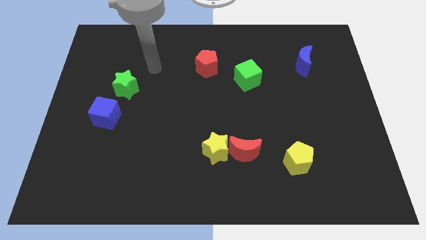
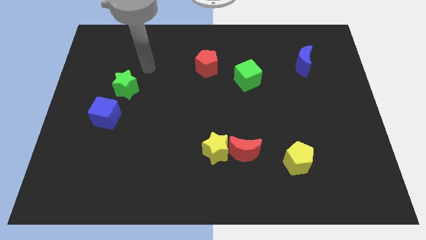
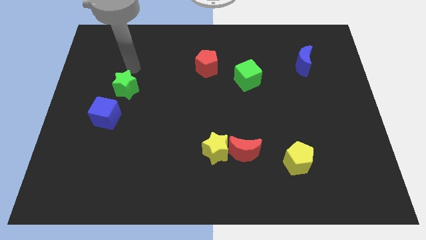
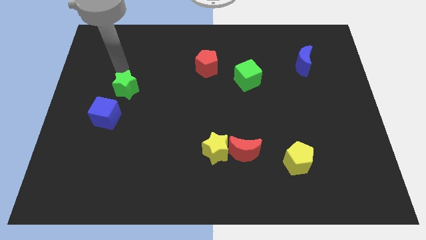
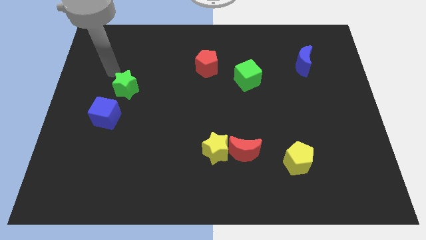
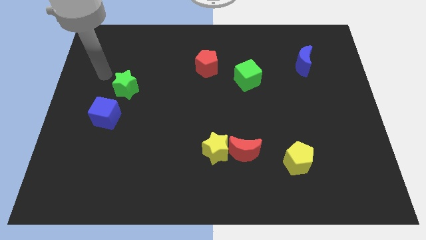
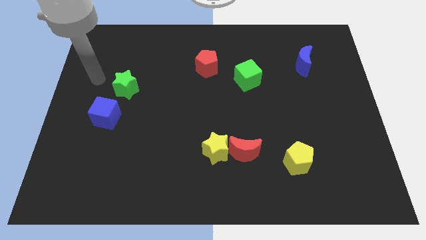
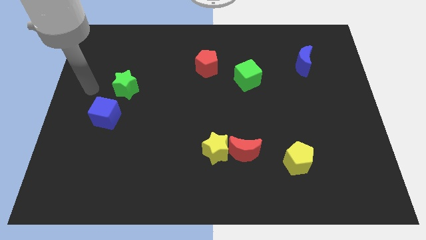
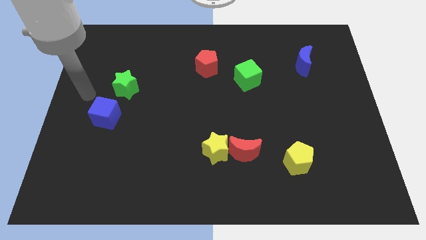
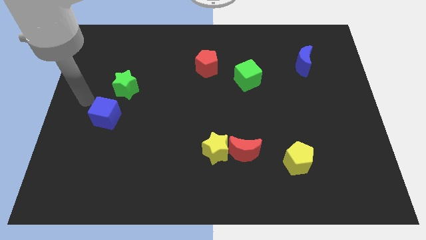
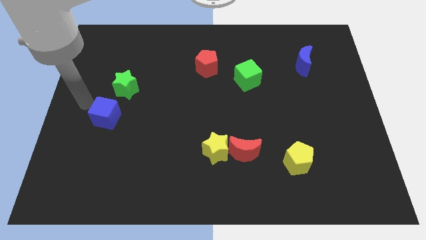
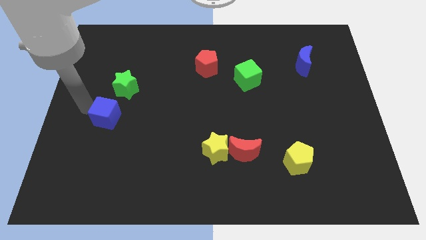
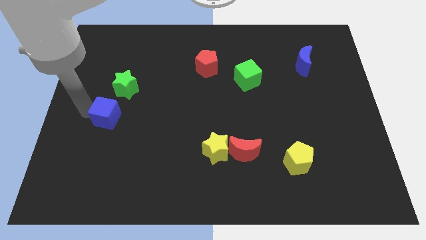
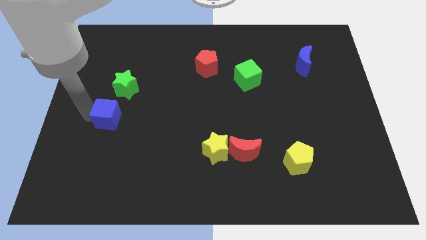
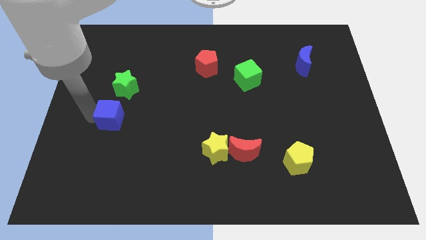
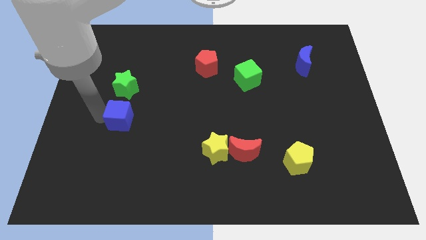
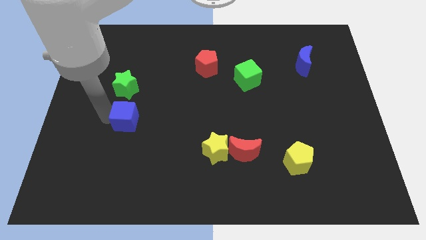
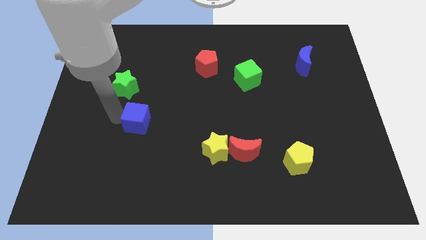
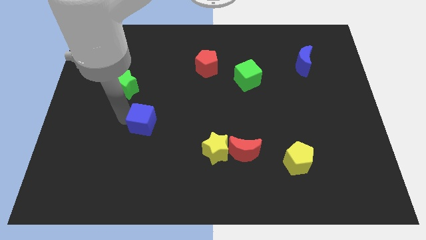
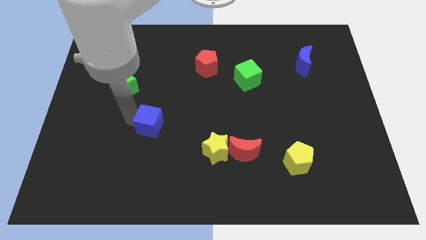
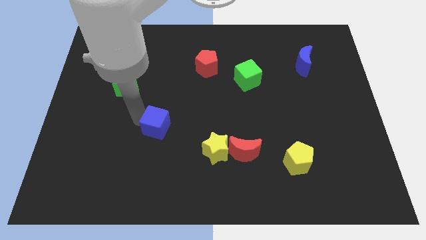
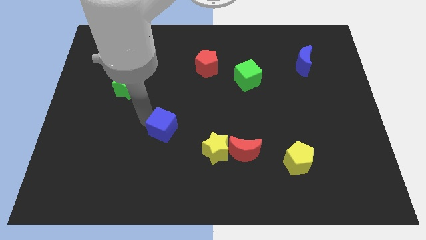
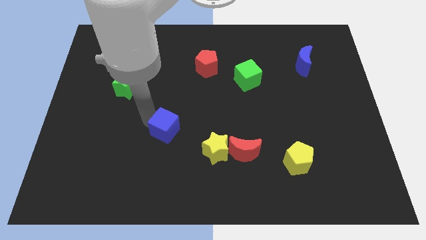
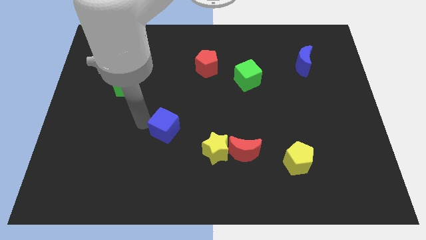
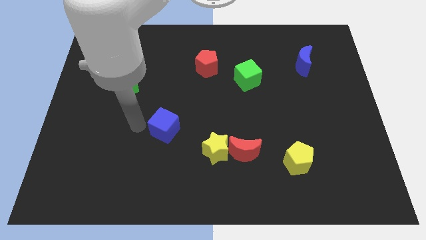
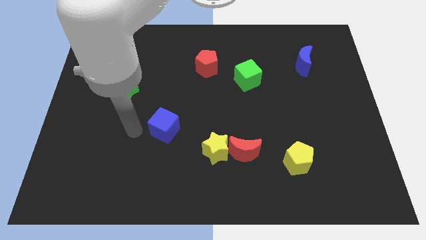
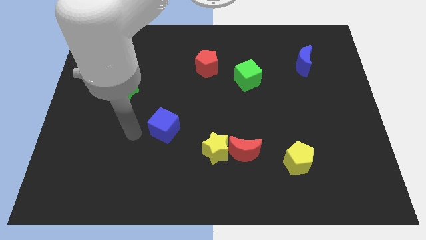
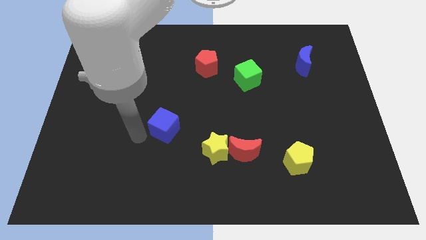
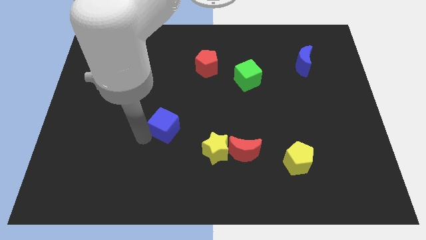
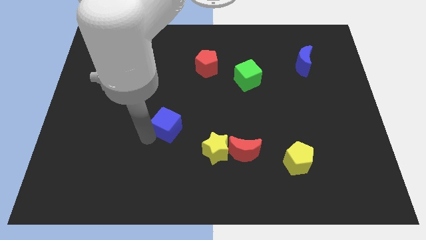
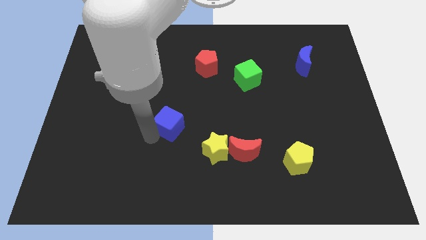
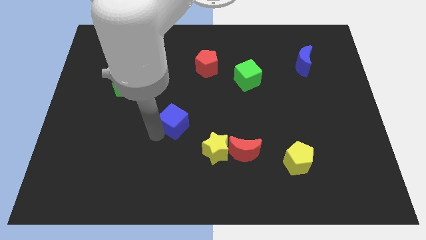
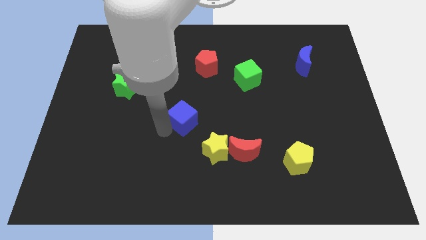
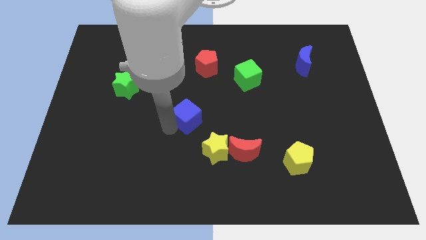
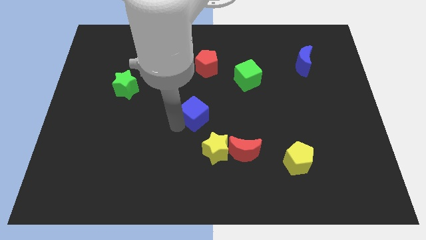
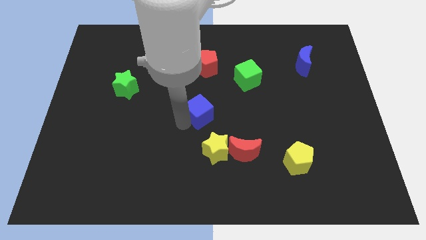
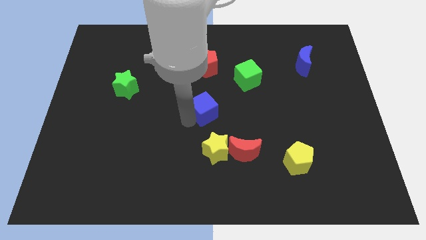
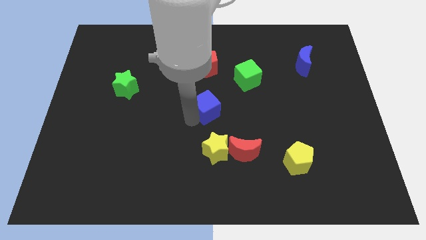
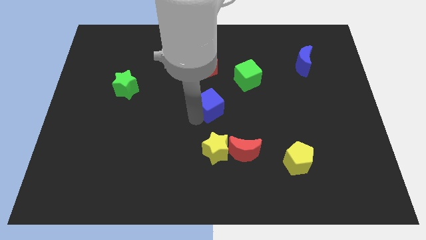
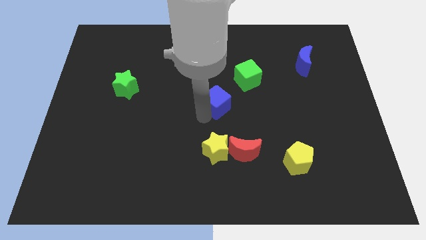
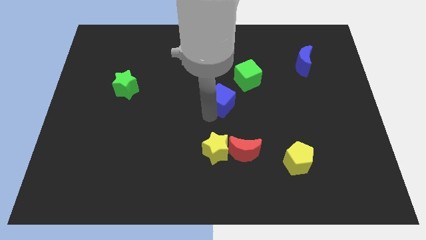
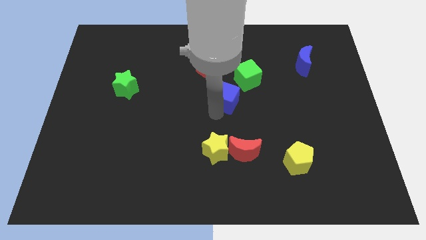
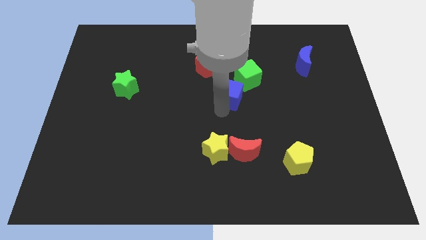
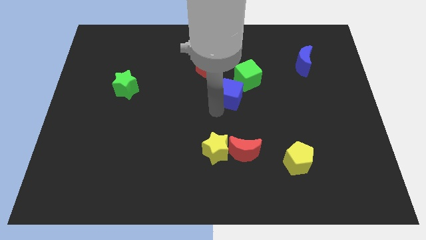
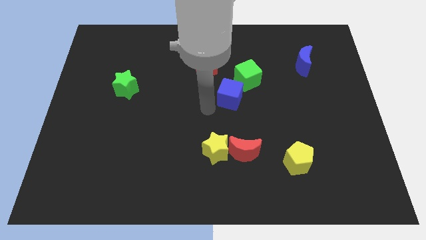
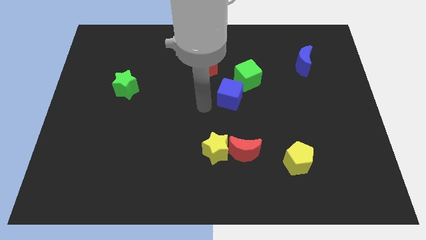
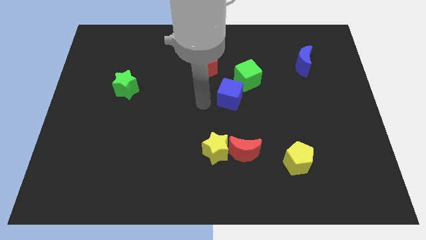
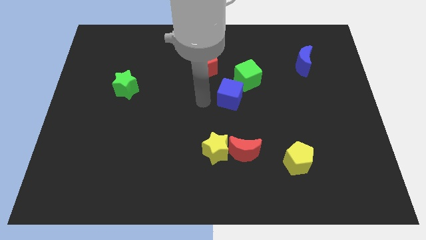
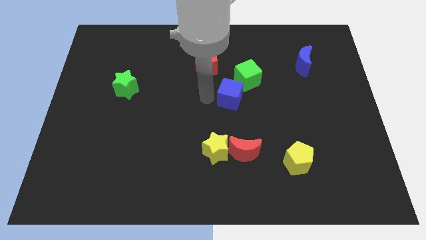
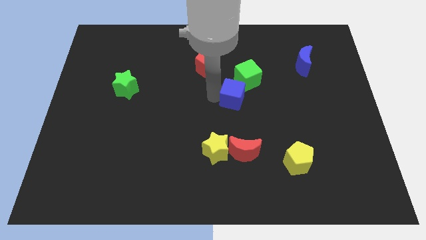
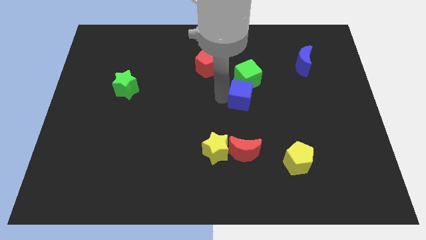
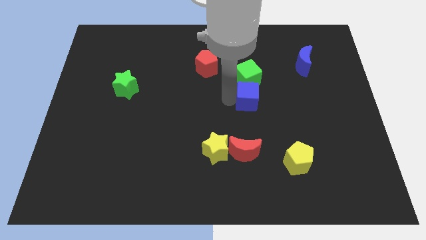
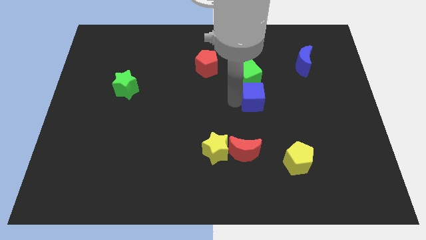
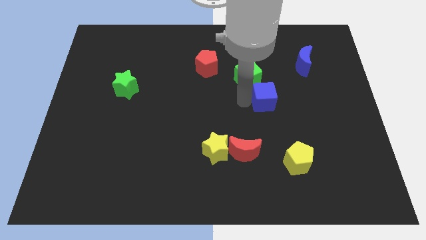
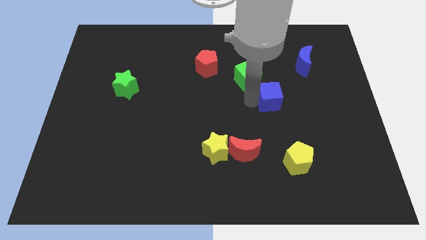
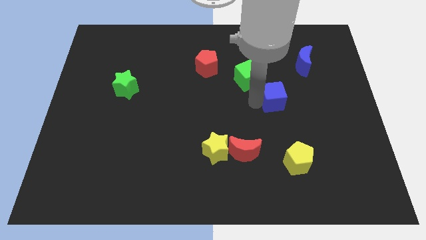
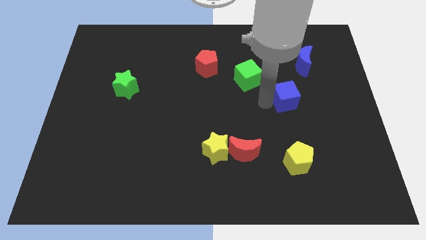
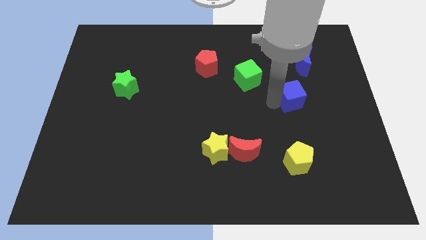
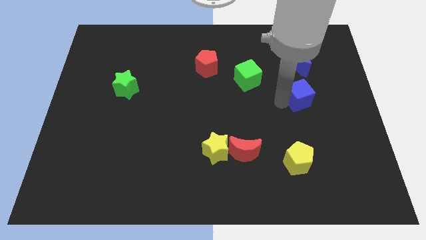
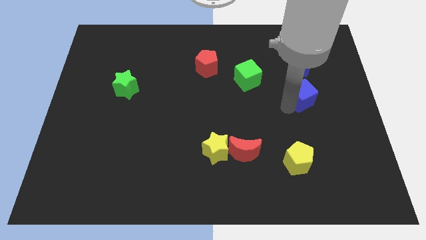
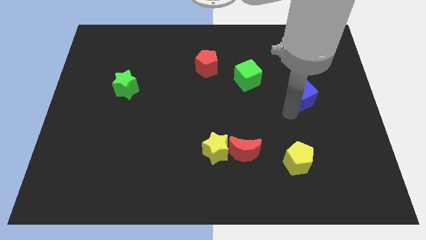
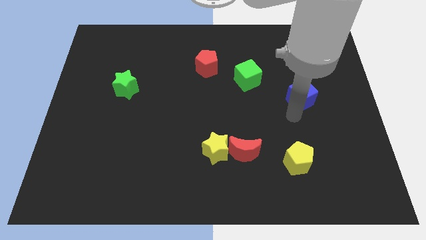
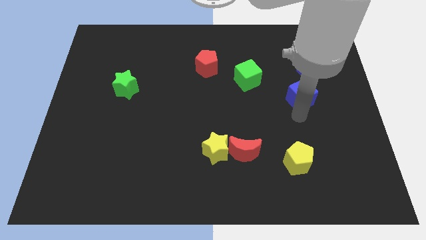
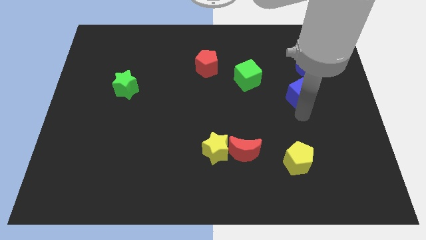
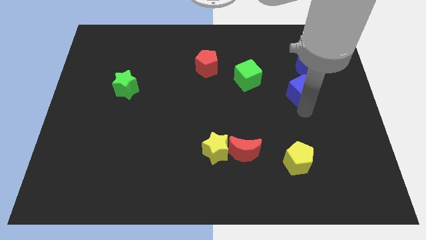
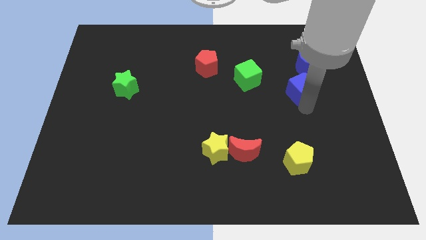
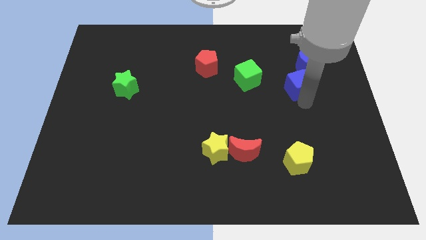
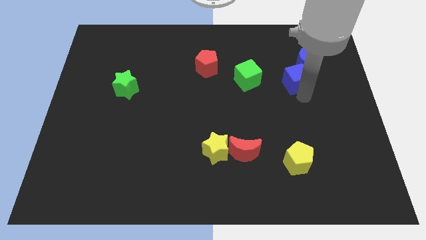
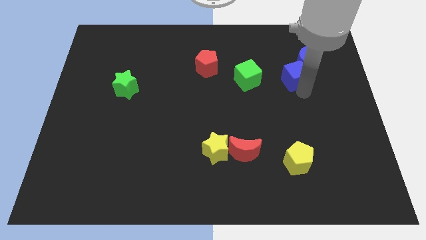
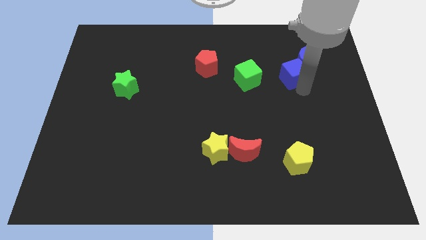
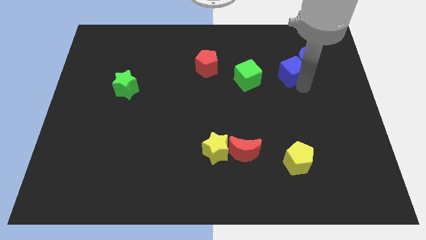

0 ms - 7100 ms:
push the blue cube next to the blue moon

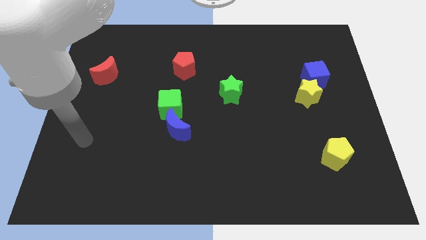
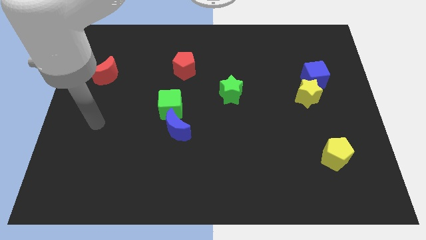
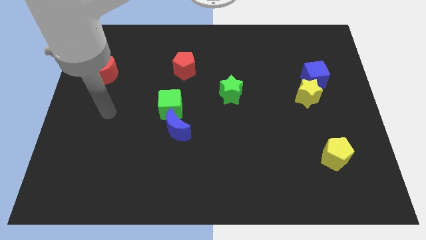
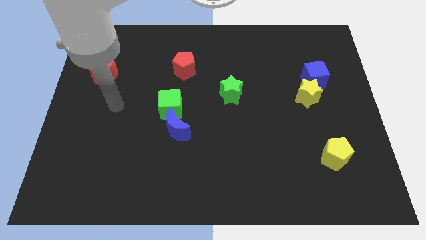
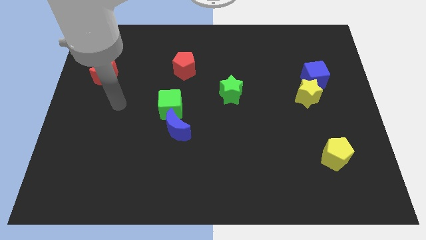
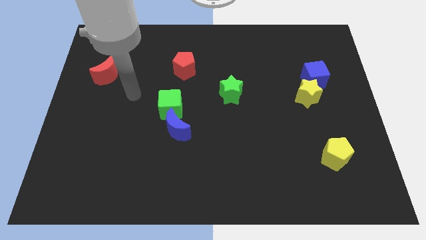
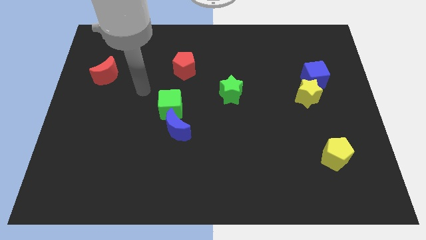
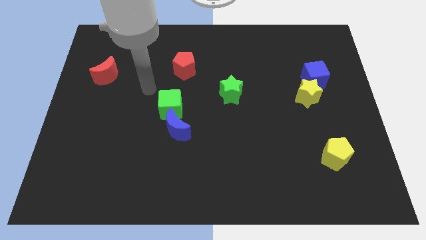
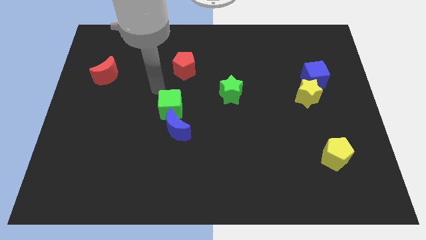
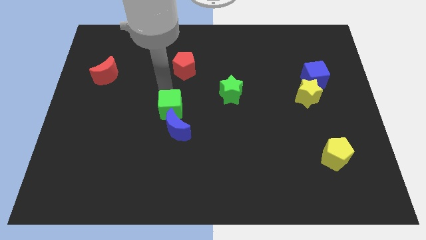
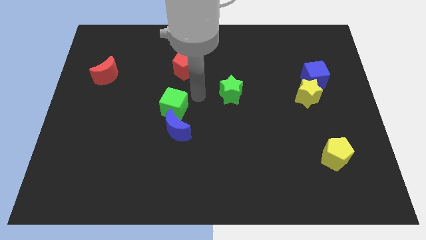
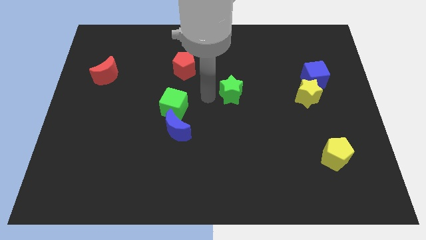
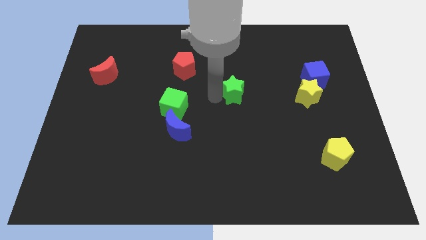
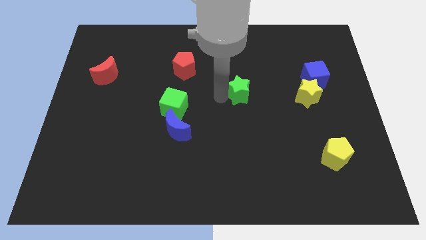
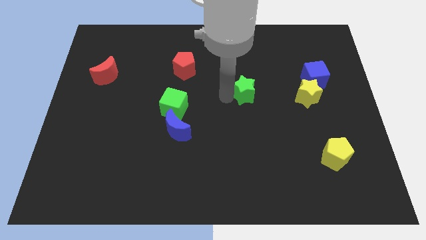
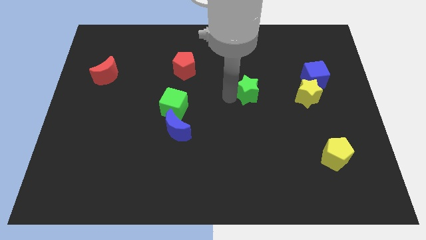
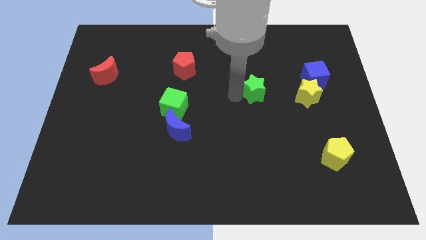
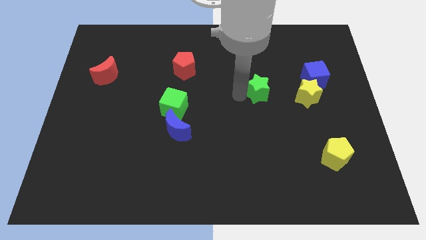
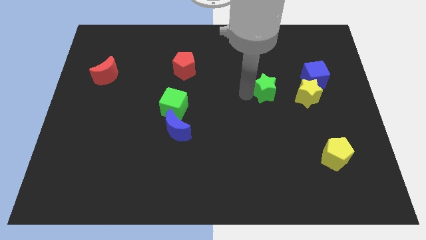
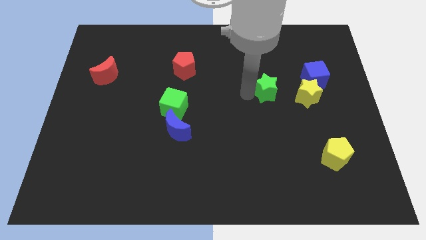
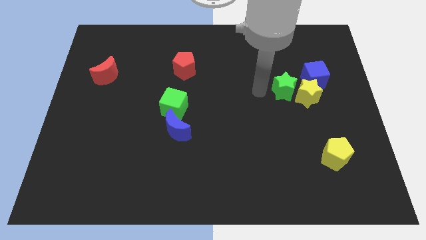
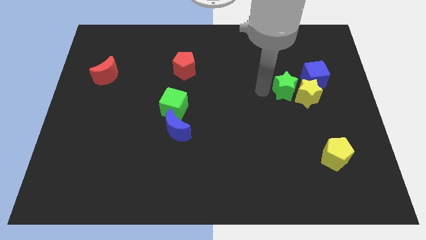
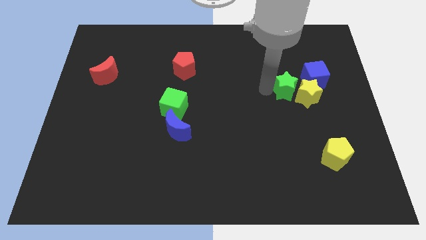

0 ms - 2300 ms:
move the green star next to the yellow star
